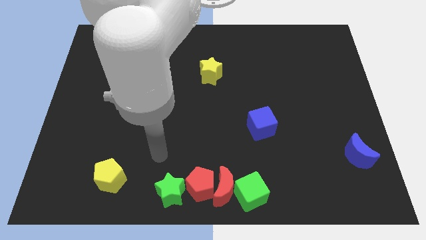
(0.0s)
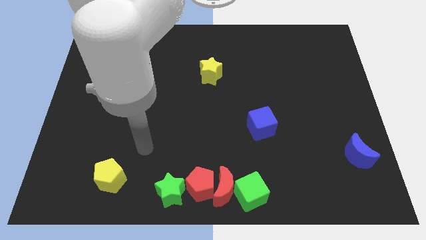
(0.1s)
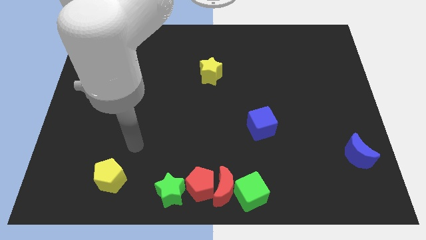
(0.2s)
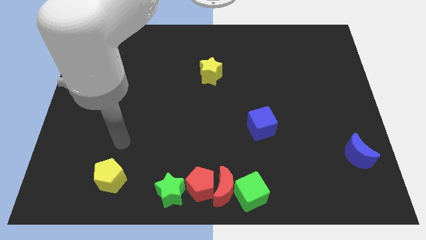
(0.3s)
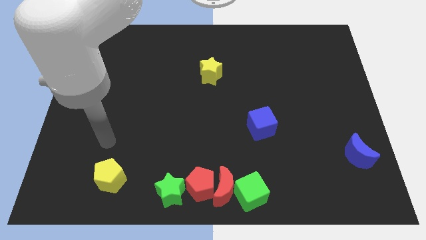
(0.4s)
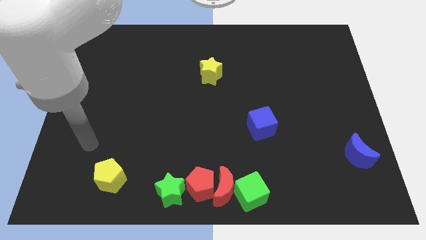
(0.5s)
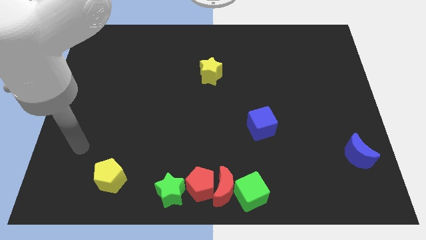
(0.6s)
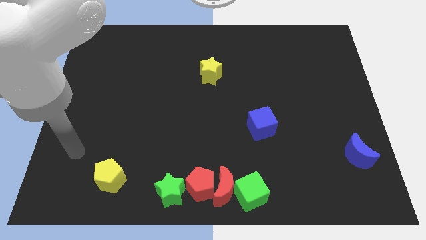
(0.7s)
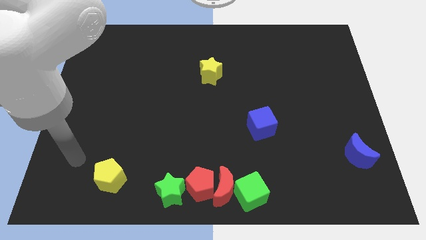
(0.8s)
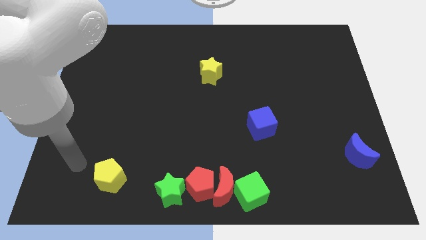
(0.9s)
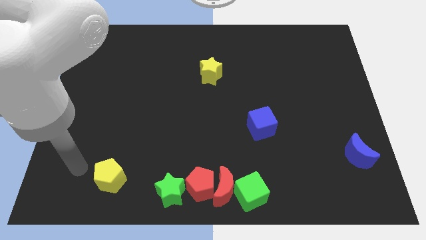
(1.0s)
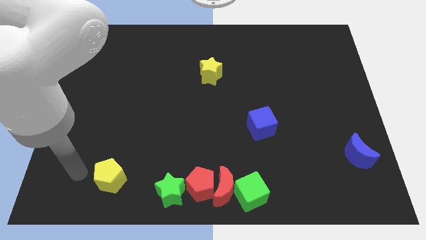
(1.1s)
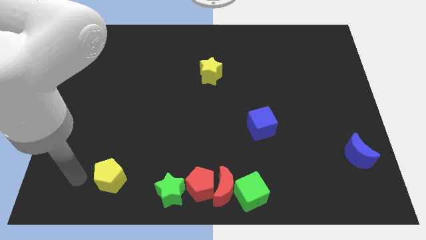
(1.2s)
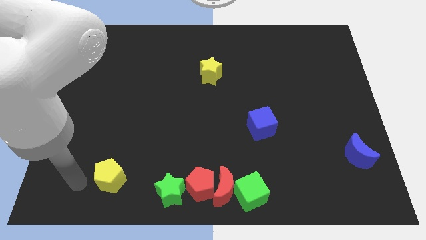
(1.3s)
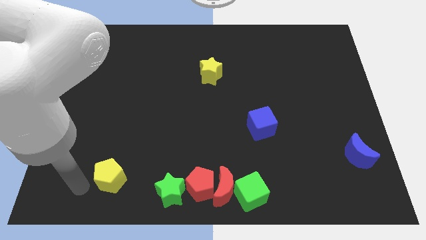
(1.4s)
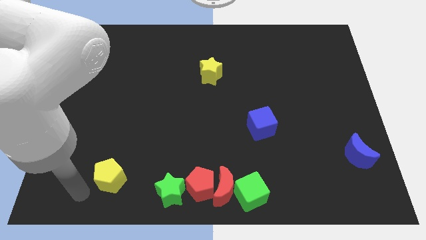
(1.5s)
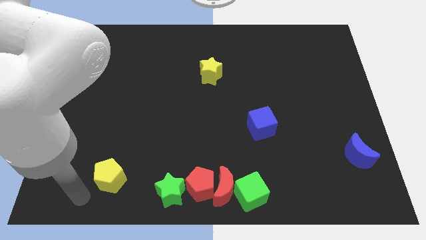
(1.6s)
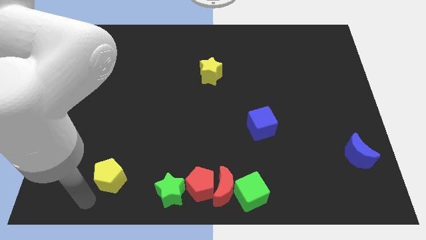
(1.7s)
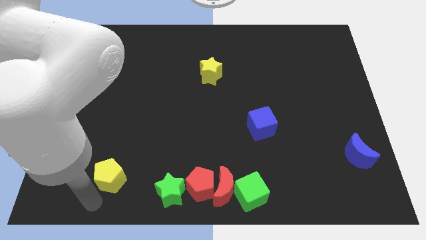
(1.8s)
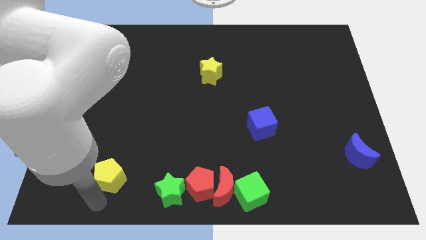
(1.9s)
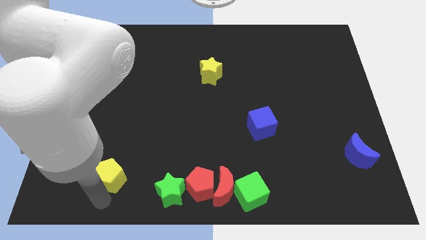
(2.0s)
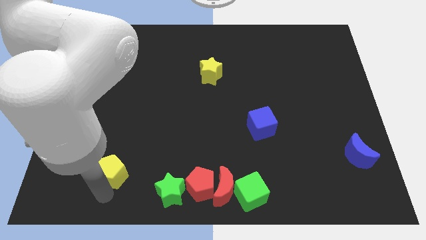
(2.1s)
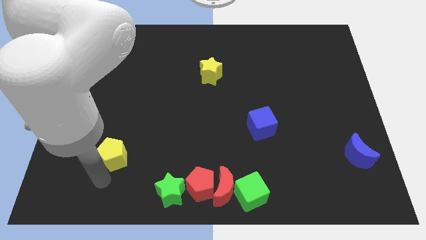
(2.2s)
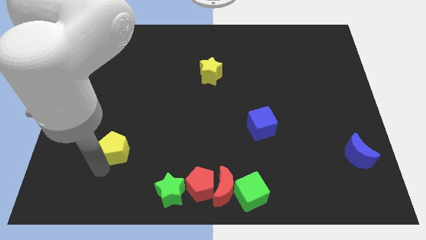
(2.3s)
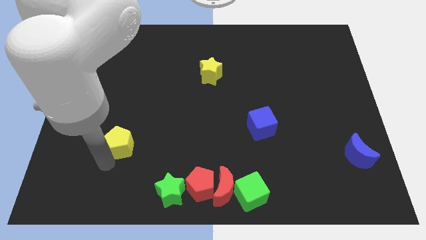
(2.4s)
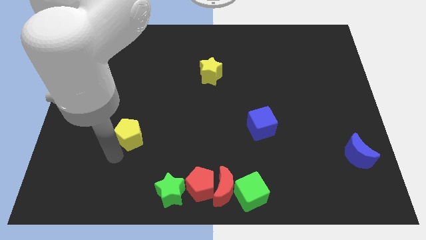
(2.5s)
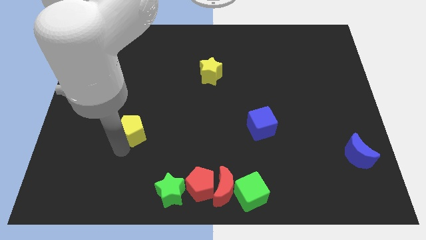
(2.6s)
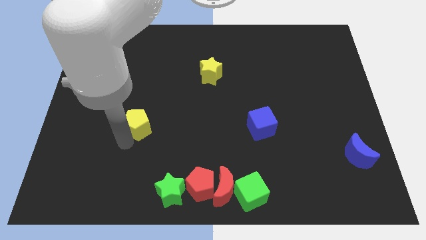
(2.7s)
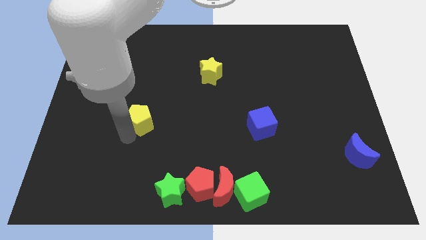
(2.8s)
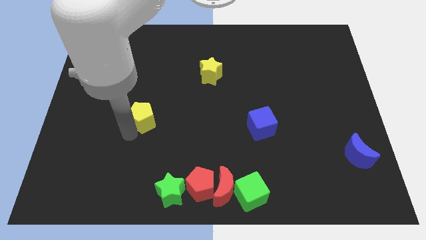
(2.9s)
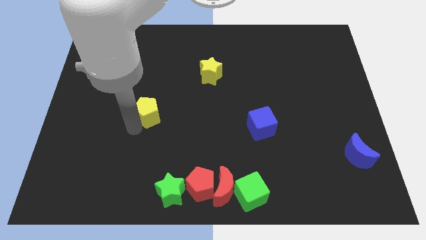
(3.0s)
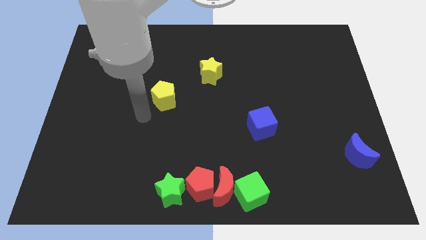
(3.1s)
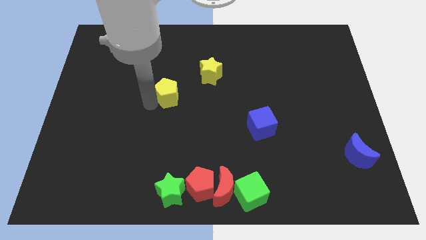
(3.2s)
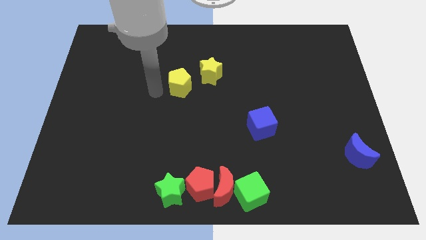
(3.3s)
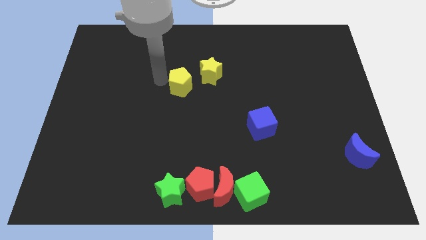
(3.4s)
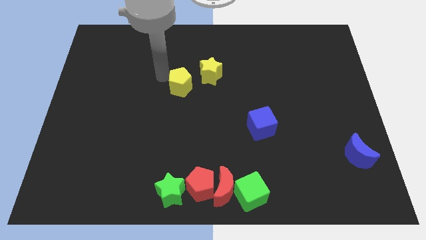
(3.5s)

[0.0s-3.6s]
move the yellow pentagon towards the yellow star

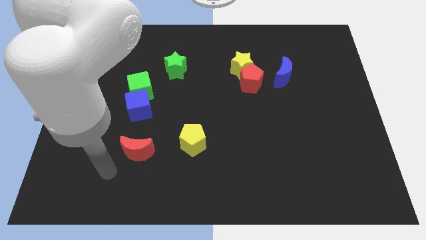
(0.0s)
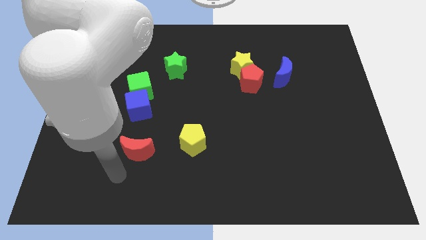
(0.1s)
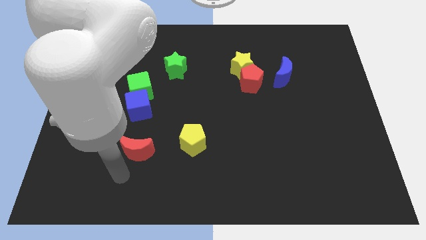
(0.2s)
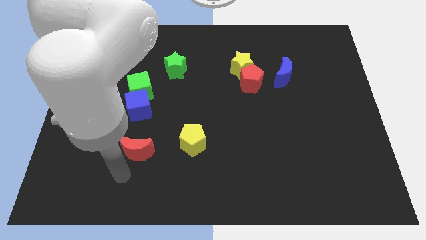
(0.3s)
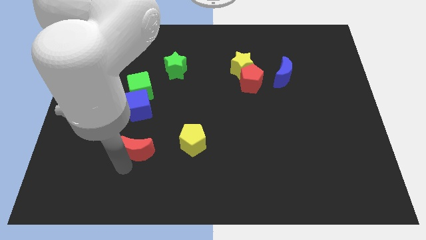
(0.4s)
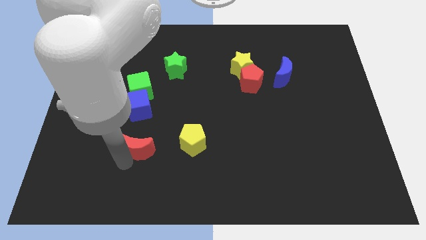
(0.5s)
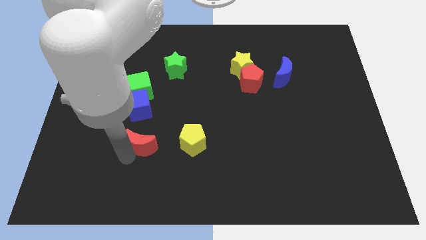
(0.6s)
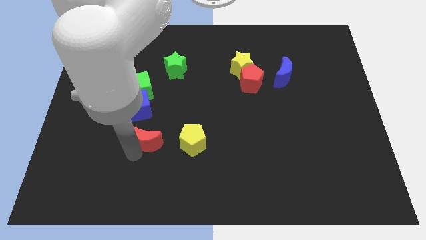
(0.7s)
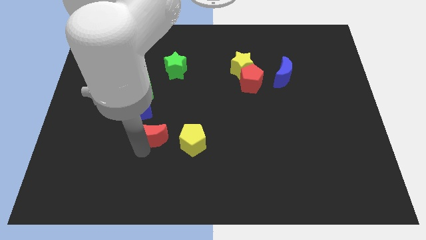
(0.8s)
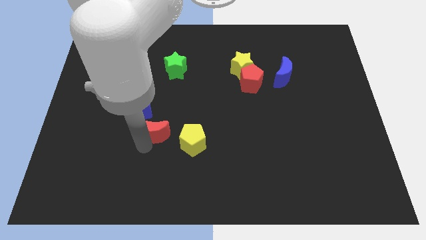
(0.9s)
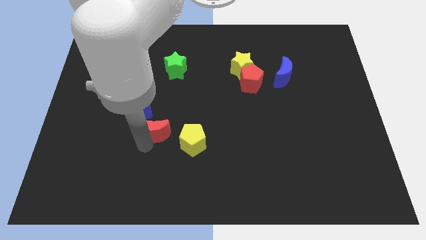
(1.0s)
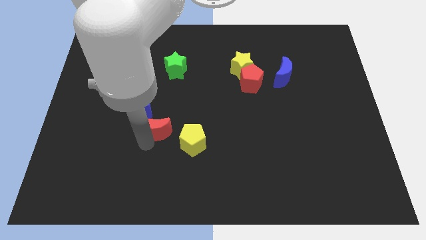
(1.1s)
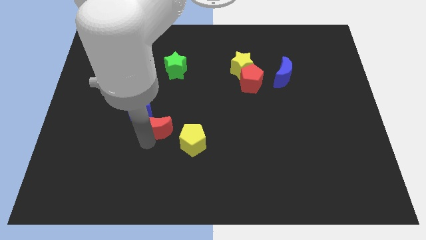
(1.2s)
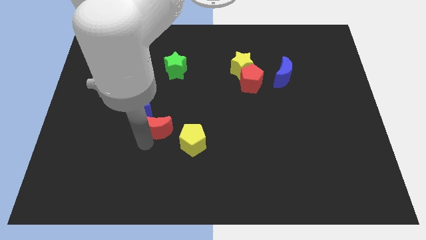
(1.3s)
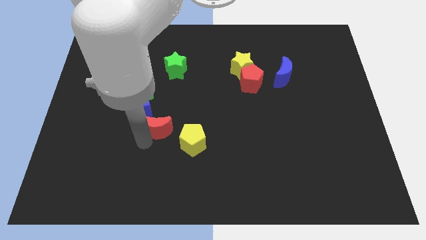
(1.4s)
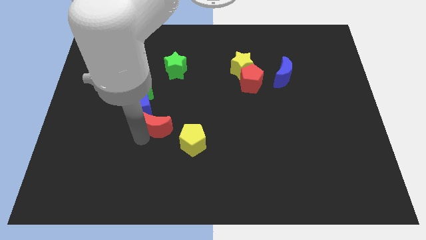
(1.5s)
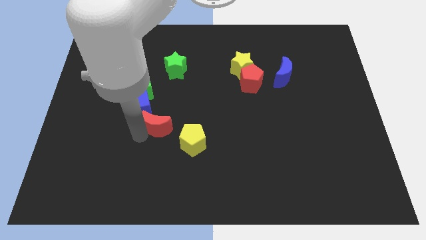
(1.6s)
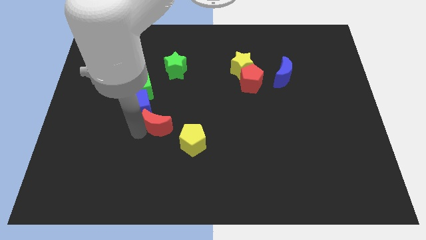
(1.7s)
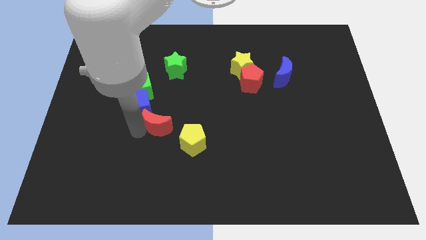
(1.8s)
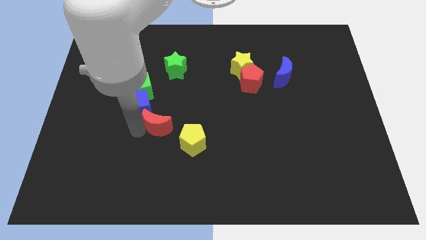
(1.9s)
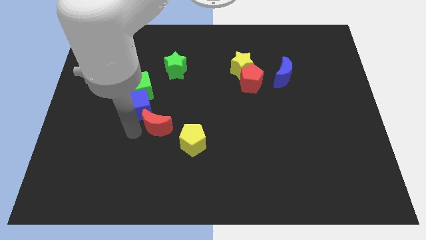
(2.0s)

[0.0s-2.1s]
push the red moon into the blue cube

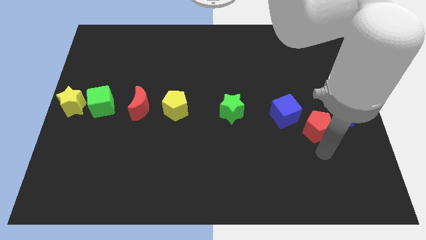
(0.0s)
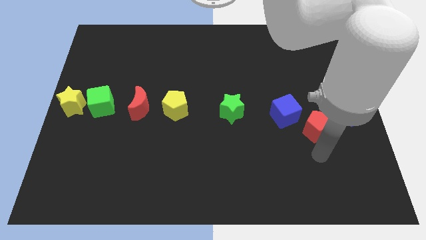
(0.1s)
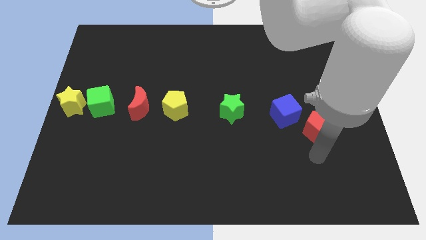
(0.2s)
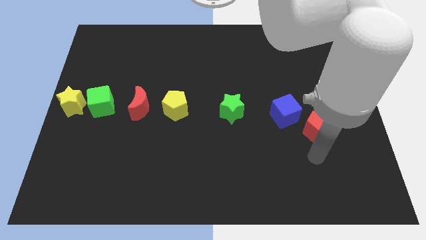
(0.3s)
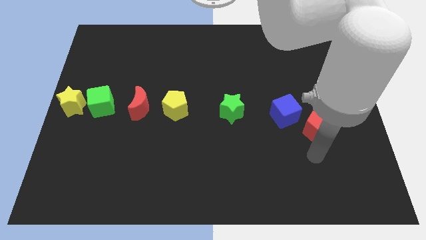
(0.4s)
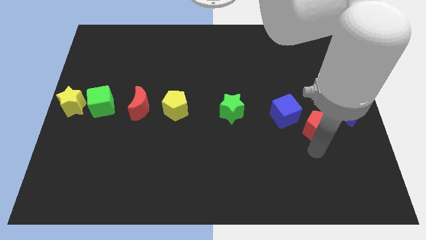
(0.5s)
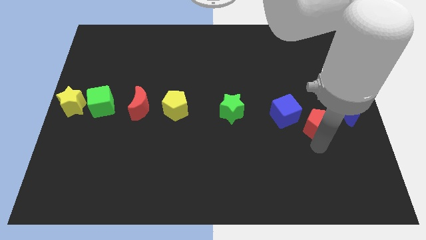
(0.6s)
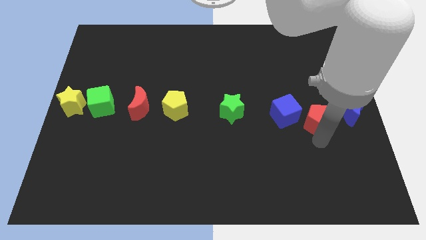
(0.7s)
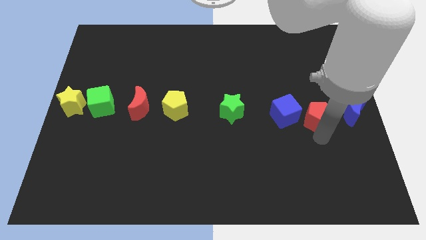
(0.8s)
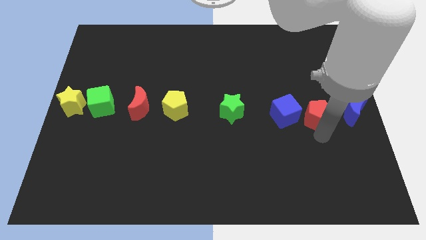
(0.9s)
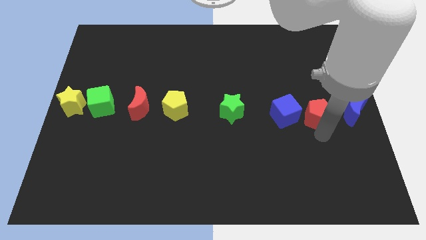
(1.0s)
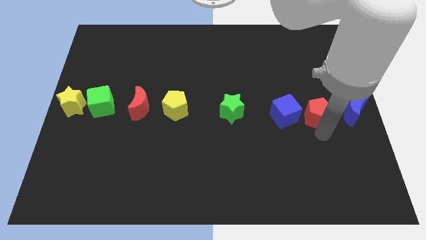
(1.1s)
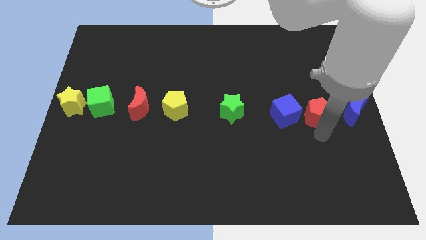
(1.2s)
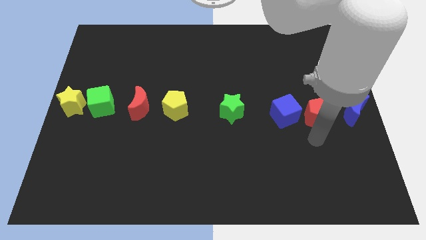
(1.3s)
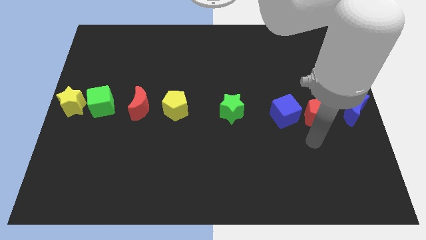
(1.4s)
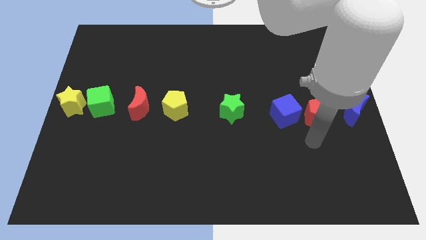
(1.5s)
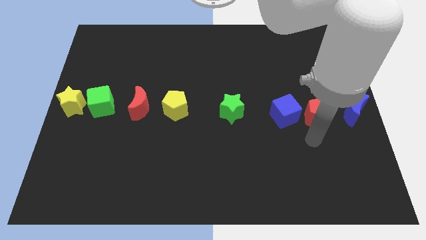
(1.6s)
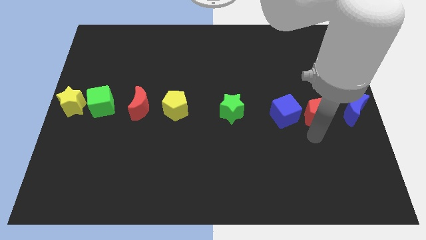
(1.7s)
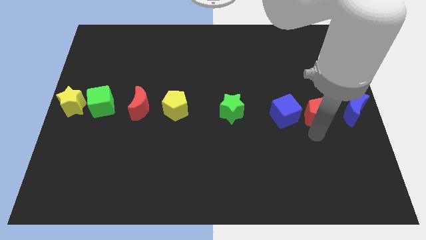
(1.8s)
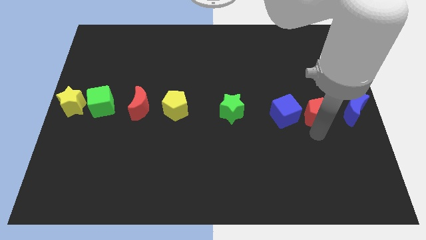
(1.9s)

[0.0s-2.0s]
move the red pentagon close to the blue cube

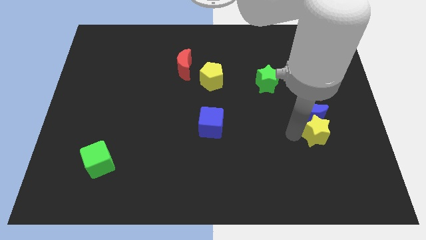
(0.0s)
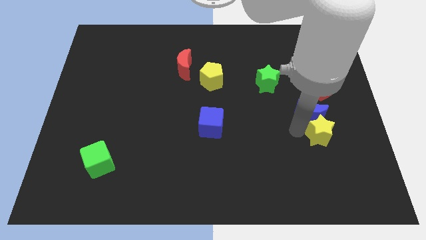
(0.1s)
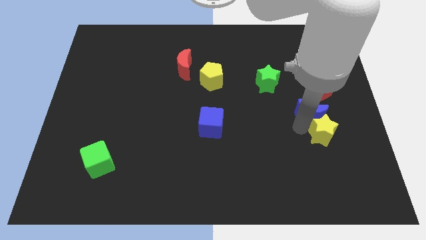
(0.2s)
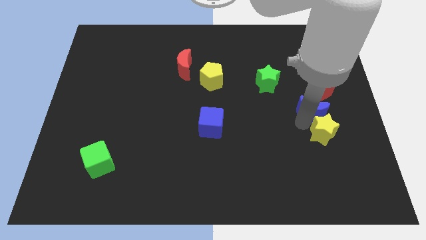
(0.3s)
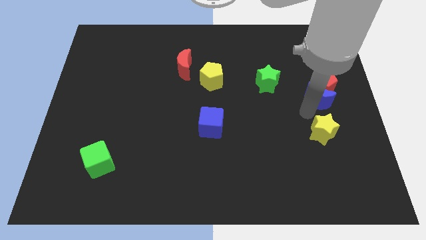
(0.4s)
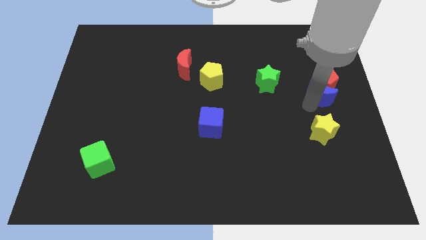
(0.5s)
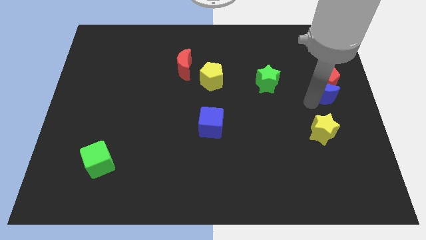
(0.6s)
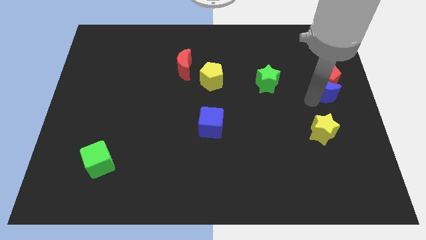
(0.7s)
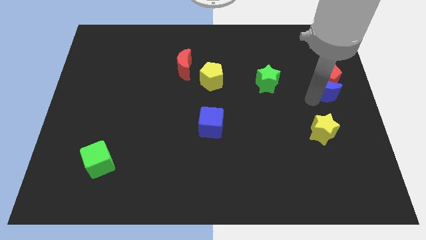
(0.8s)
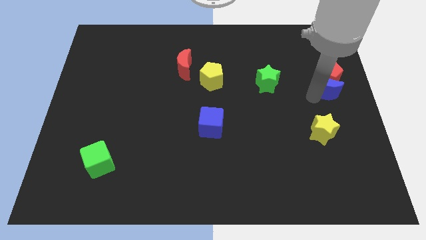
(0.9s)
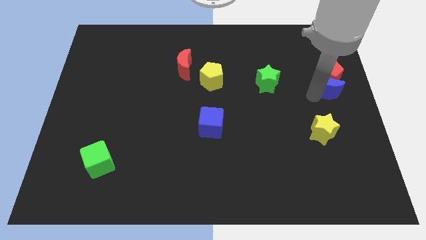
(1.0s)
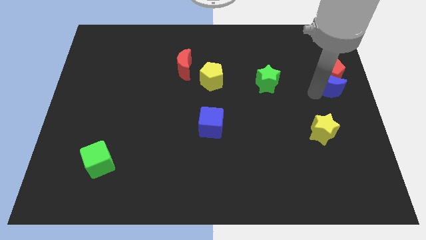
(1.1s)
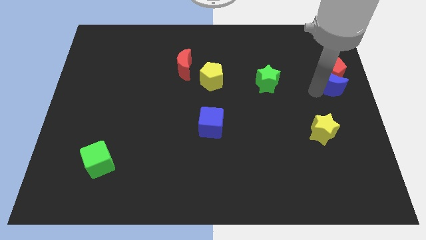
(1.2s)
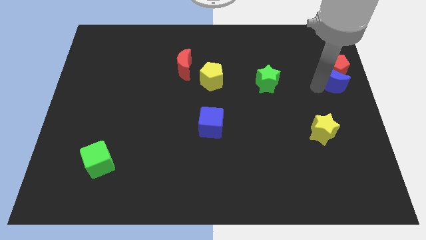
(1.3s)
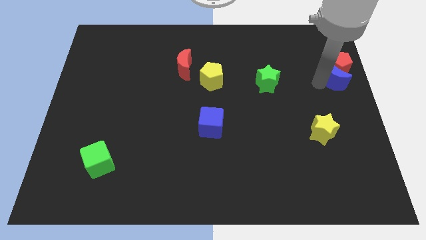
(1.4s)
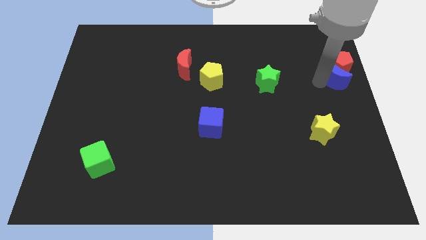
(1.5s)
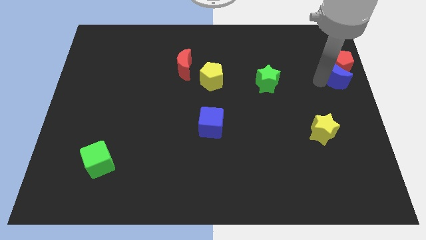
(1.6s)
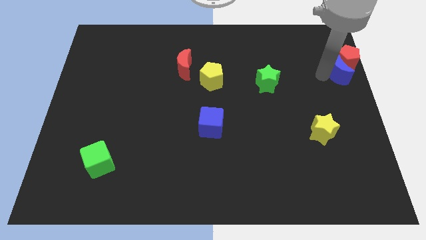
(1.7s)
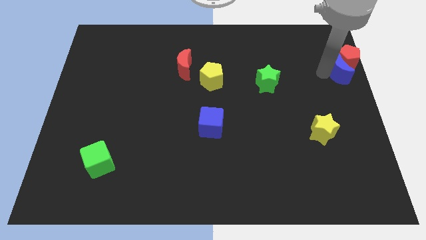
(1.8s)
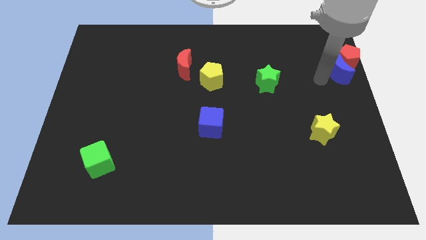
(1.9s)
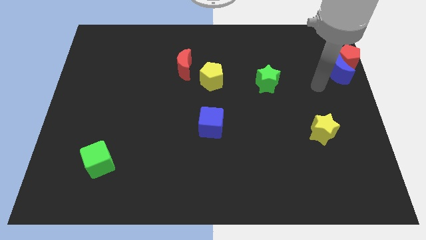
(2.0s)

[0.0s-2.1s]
move the blue moon and red moon towards the bottom right
